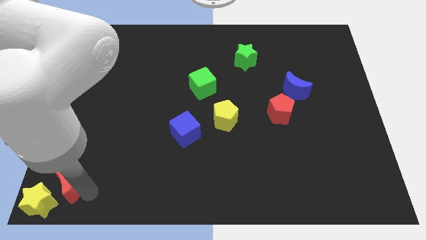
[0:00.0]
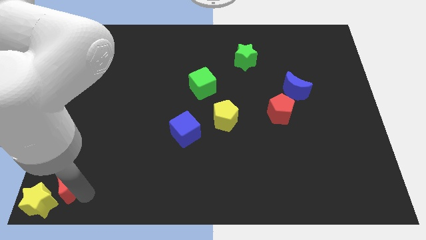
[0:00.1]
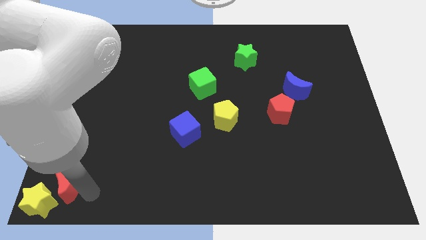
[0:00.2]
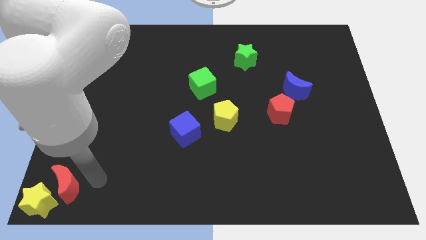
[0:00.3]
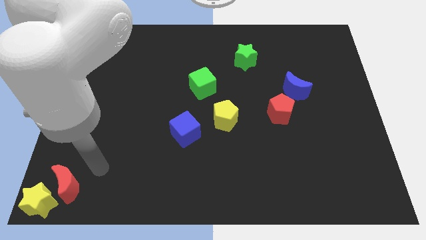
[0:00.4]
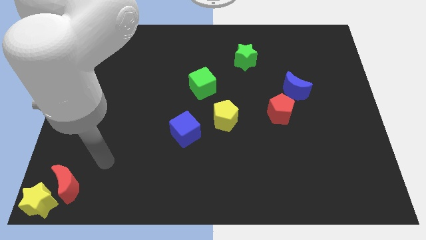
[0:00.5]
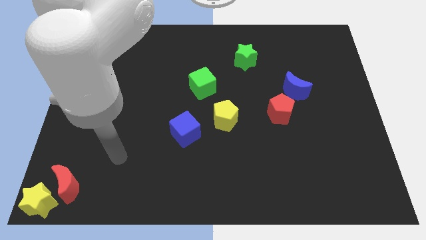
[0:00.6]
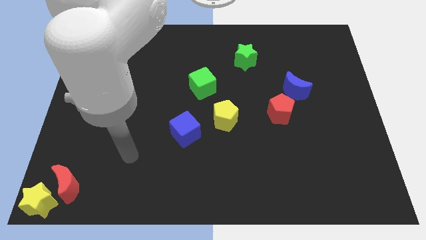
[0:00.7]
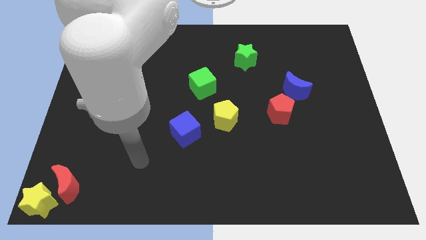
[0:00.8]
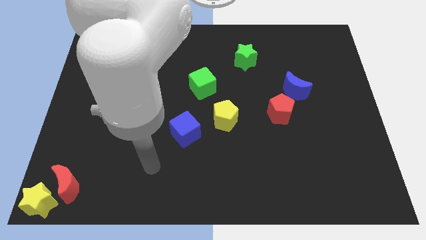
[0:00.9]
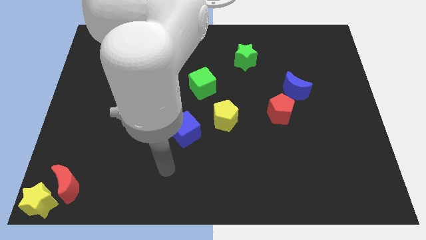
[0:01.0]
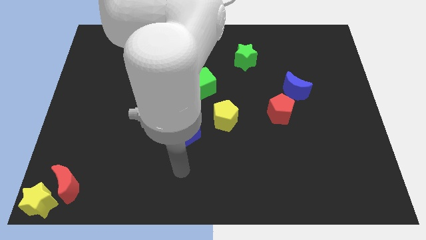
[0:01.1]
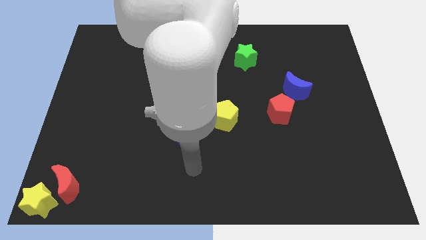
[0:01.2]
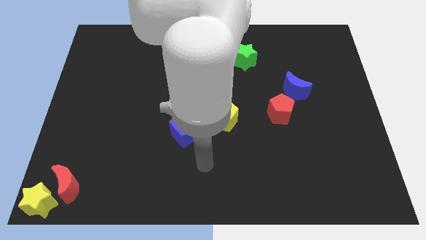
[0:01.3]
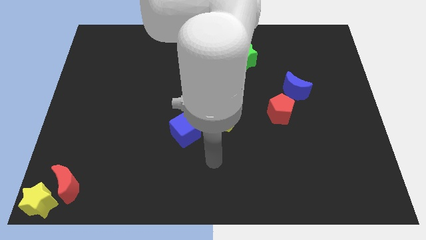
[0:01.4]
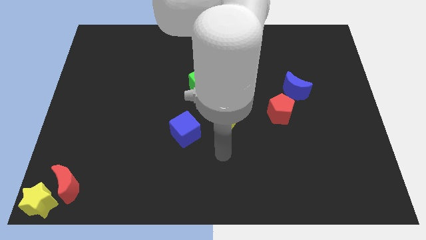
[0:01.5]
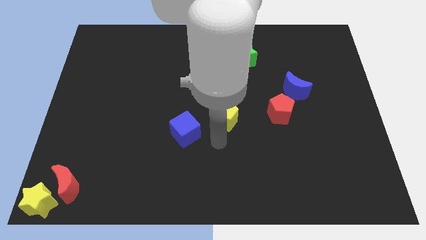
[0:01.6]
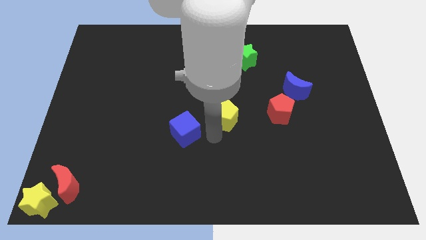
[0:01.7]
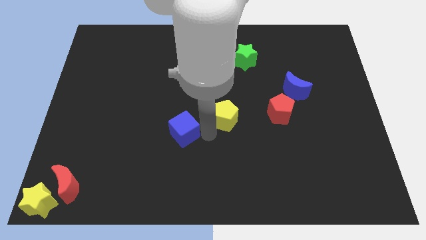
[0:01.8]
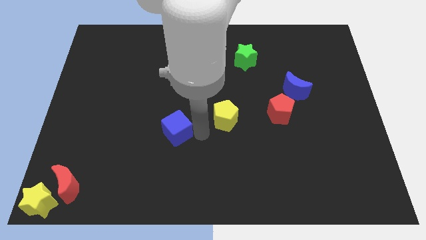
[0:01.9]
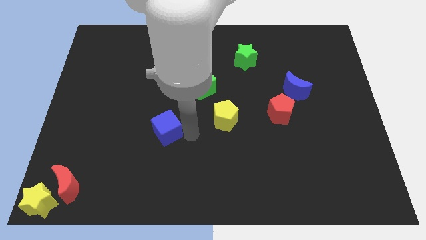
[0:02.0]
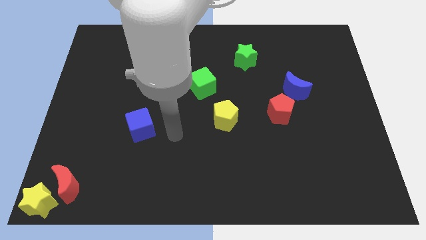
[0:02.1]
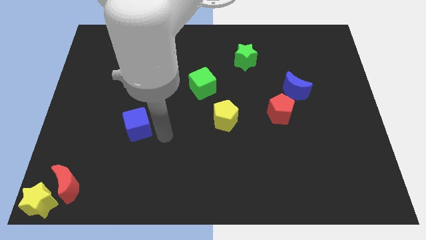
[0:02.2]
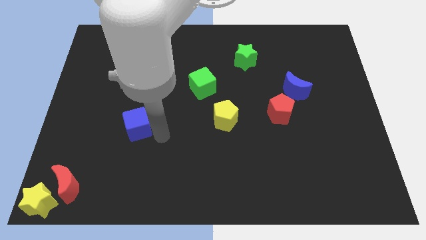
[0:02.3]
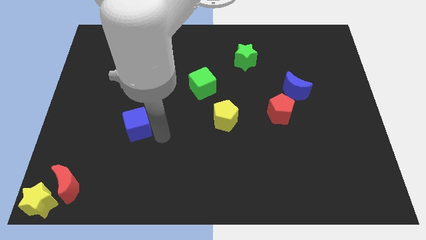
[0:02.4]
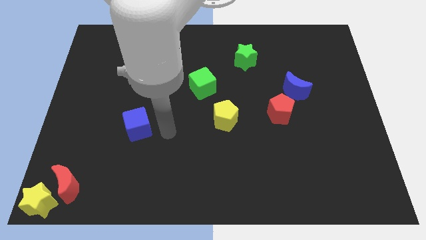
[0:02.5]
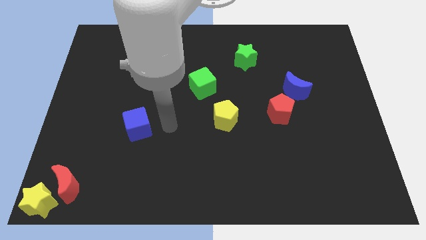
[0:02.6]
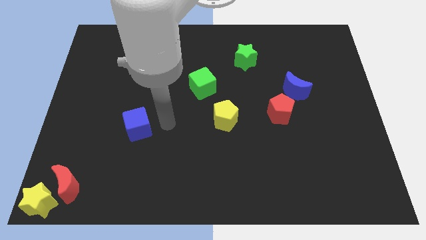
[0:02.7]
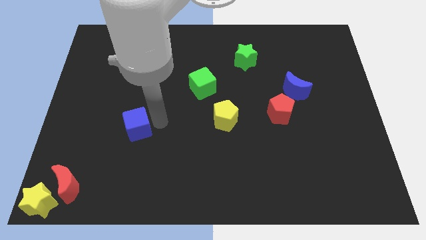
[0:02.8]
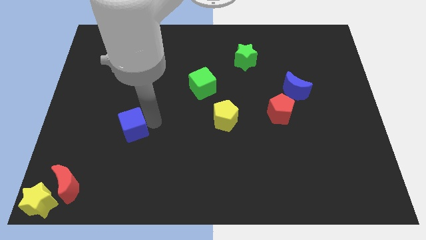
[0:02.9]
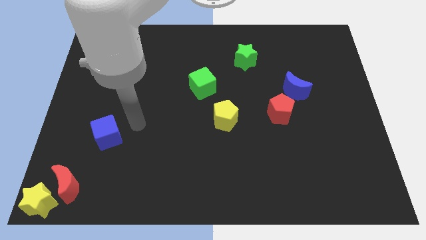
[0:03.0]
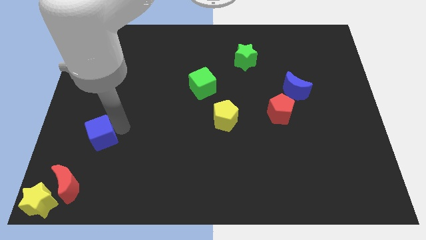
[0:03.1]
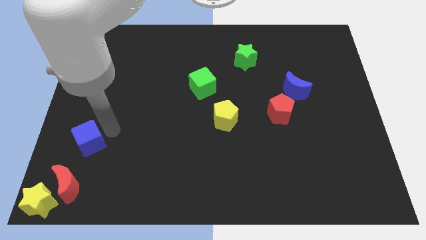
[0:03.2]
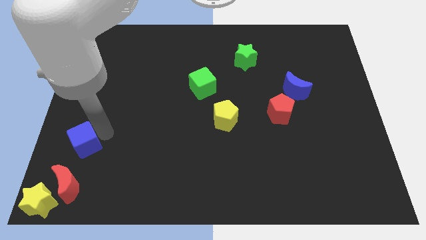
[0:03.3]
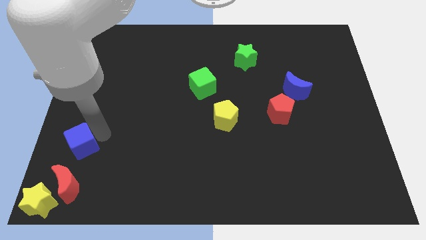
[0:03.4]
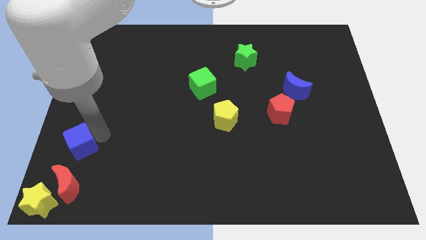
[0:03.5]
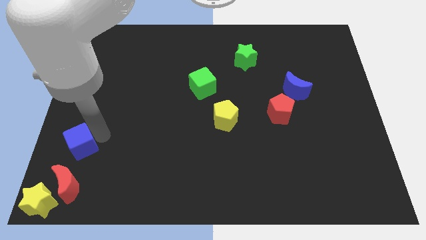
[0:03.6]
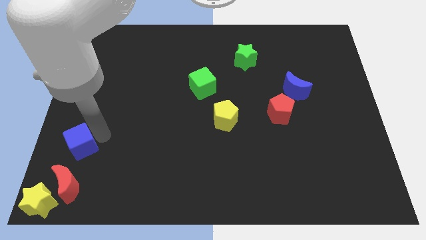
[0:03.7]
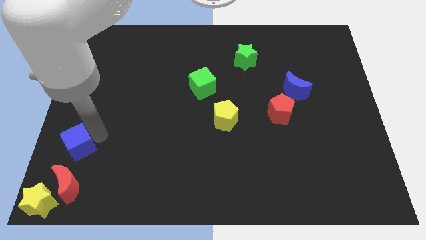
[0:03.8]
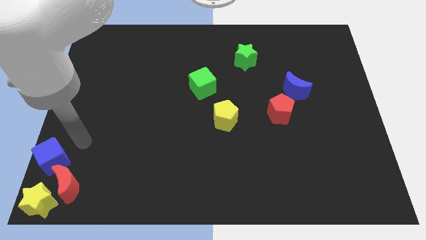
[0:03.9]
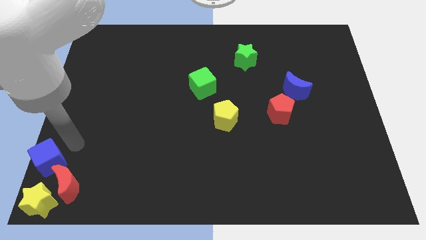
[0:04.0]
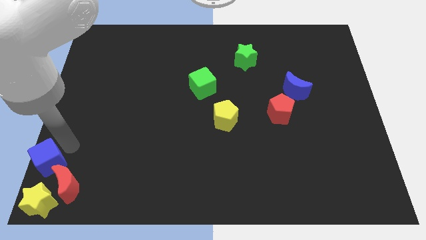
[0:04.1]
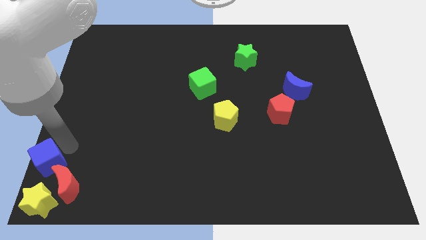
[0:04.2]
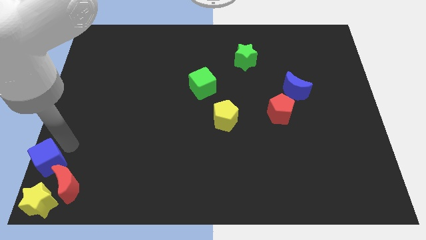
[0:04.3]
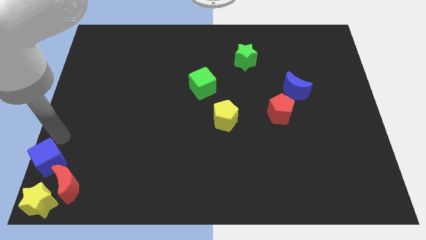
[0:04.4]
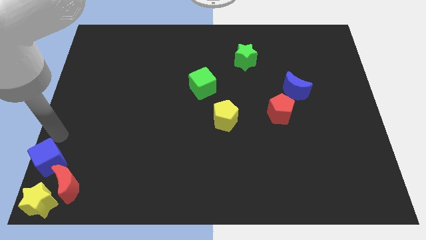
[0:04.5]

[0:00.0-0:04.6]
place the blue cube parallel above to the yellow star

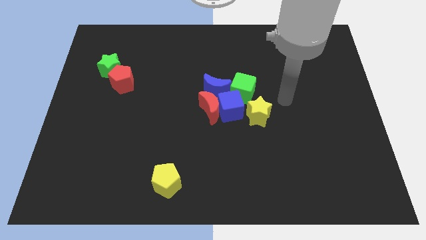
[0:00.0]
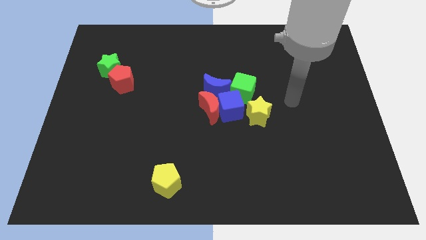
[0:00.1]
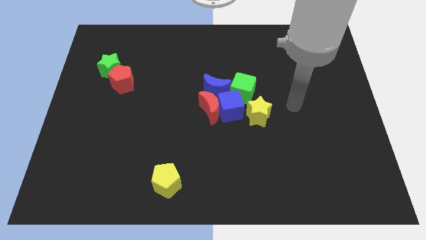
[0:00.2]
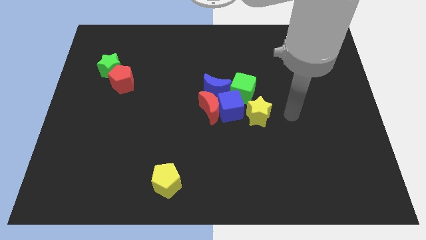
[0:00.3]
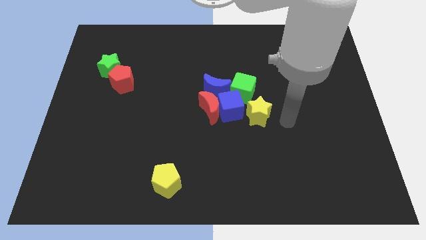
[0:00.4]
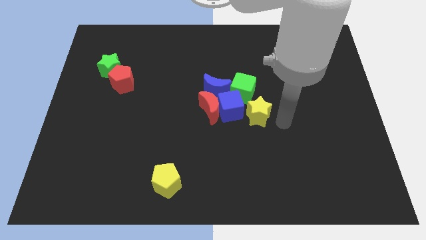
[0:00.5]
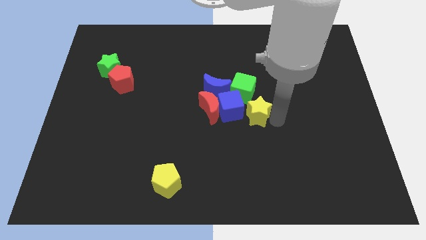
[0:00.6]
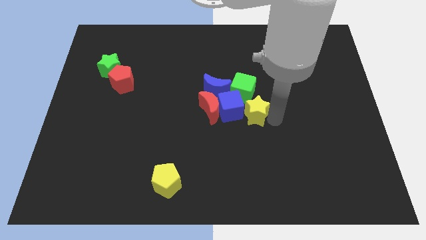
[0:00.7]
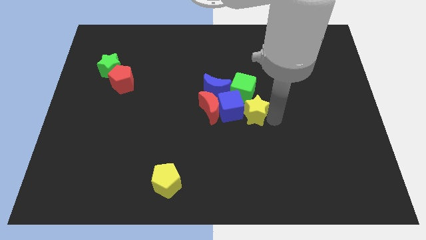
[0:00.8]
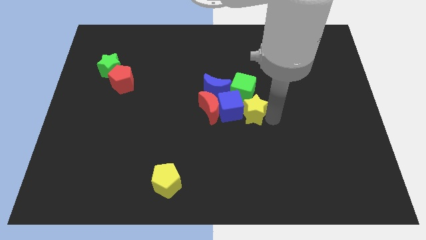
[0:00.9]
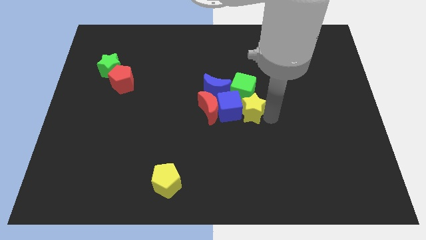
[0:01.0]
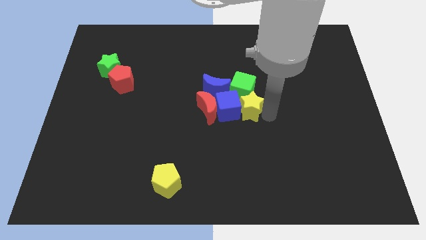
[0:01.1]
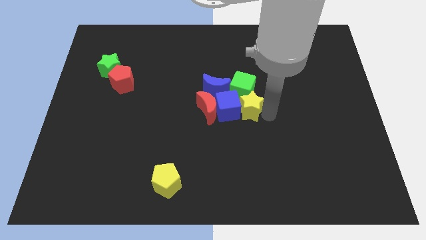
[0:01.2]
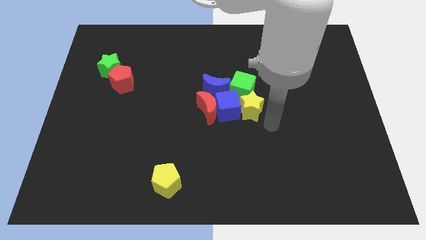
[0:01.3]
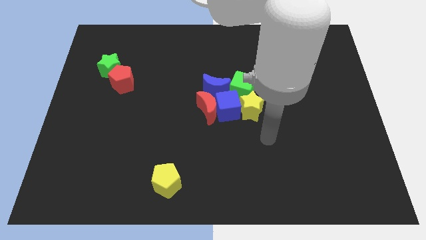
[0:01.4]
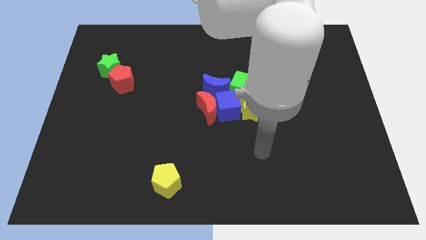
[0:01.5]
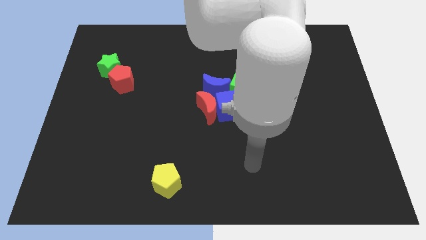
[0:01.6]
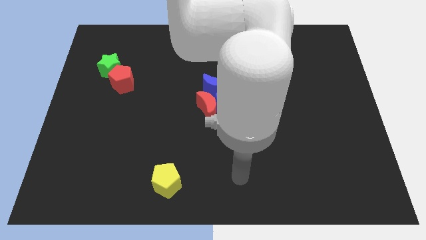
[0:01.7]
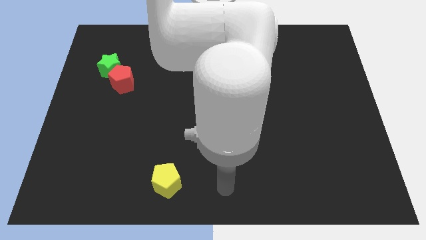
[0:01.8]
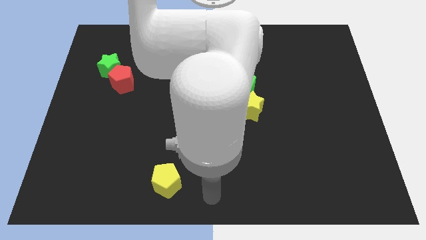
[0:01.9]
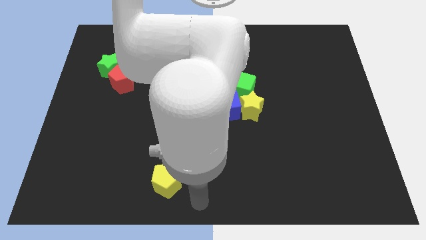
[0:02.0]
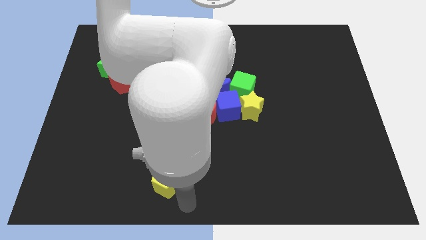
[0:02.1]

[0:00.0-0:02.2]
slightly moved the yellow star to a group of elements

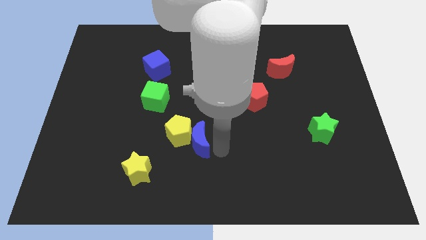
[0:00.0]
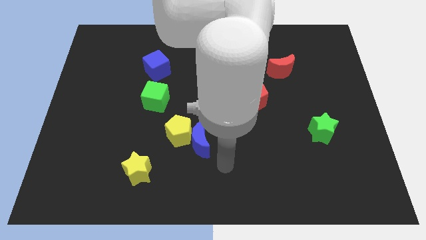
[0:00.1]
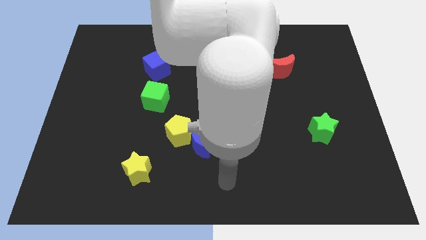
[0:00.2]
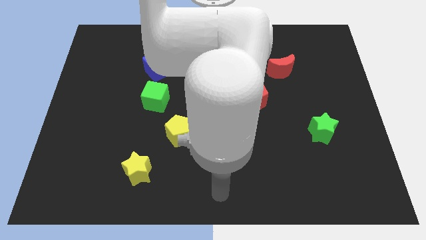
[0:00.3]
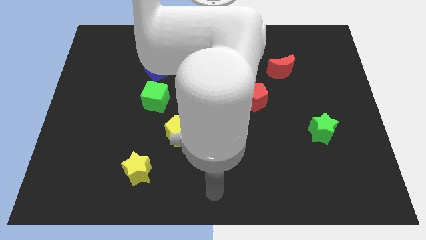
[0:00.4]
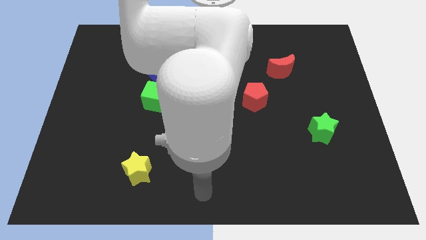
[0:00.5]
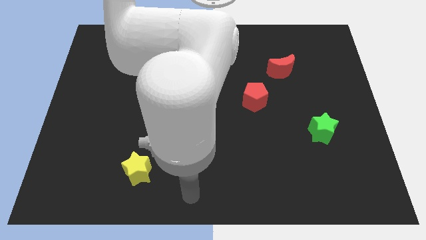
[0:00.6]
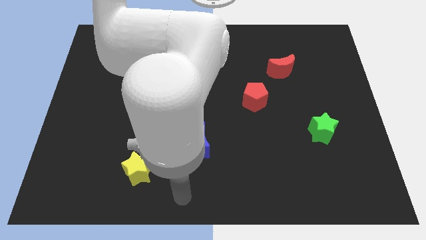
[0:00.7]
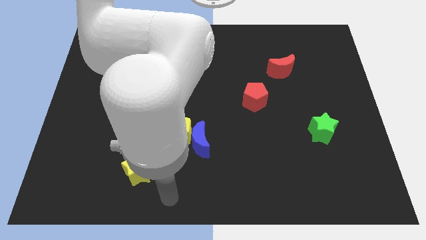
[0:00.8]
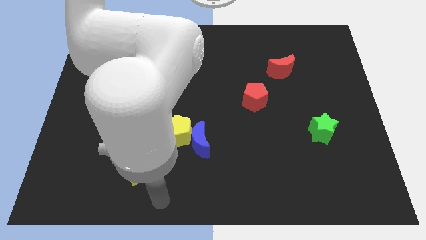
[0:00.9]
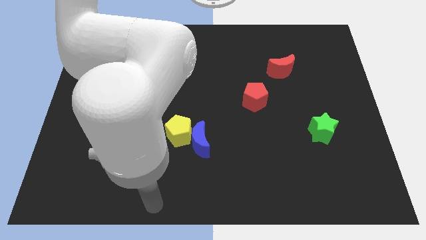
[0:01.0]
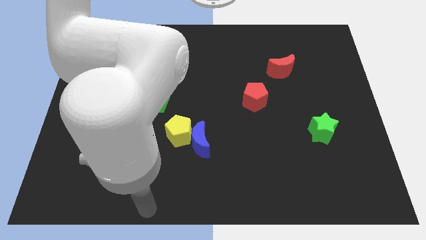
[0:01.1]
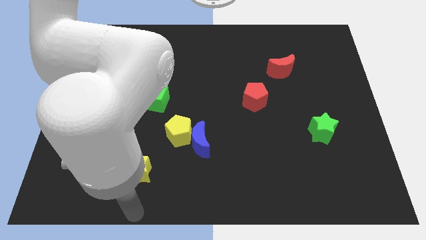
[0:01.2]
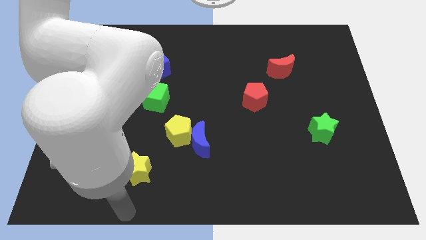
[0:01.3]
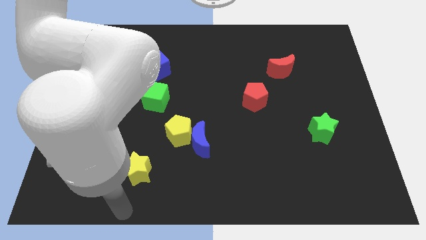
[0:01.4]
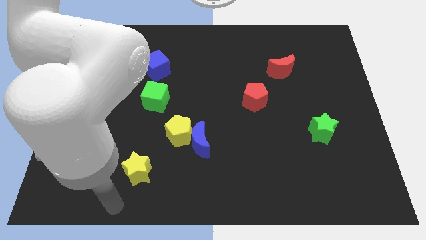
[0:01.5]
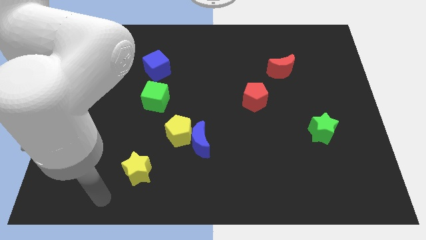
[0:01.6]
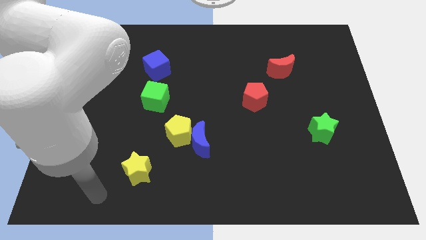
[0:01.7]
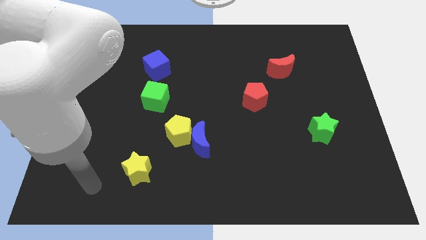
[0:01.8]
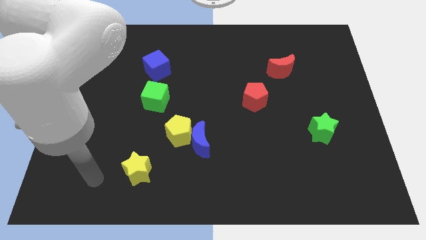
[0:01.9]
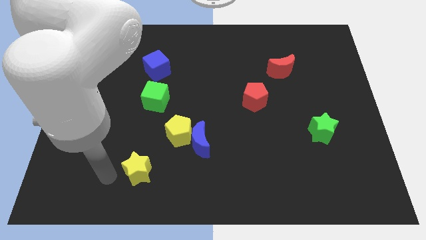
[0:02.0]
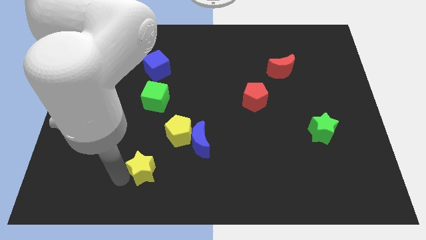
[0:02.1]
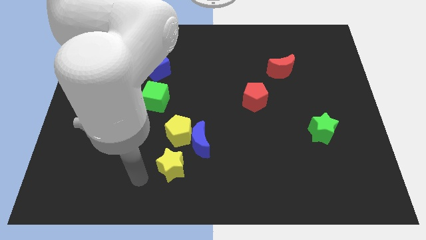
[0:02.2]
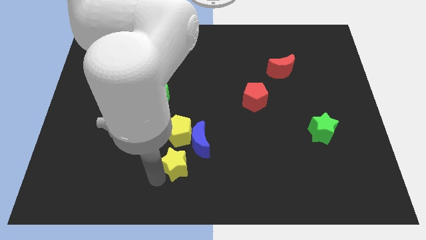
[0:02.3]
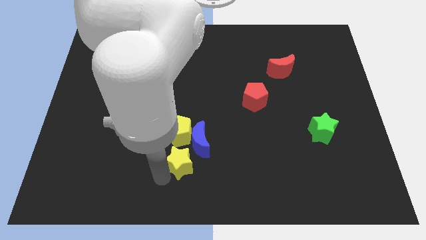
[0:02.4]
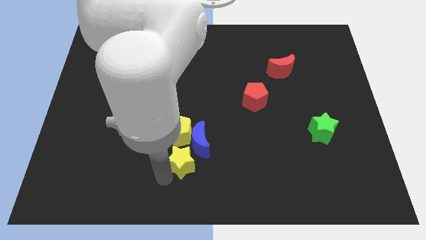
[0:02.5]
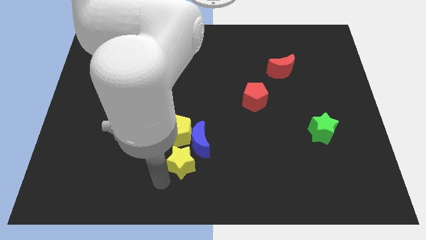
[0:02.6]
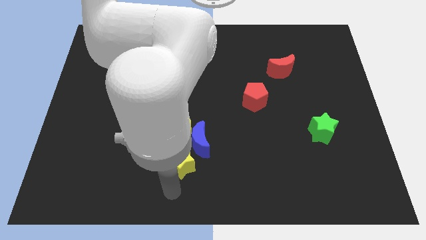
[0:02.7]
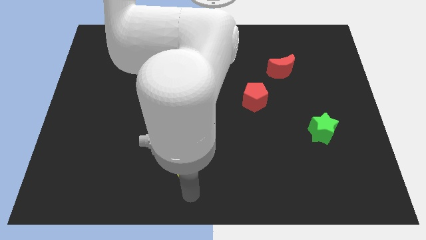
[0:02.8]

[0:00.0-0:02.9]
place the yellow star below the yellow pentagon
